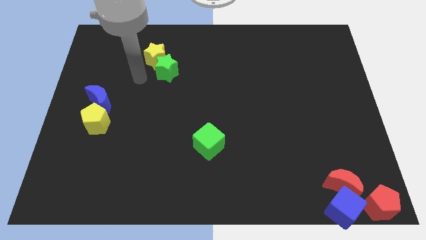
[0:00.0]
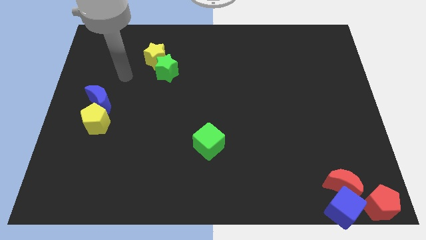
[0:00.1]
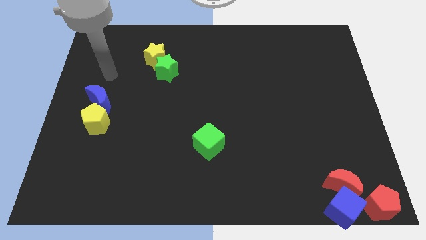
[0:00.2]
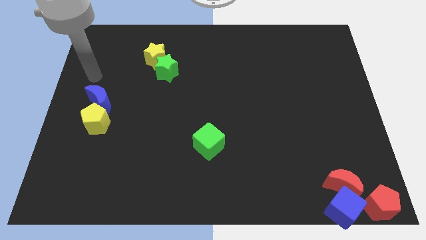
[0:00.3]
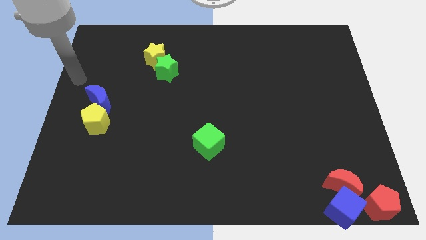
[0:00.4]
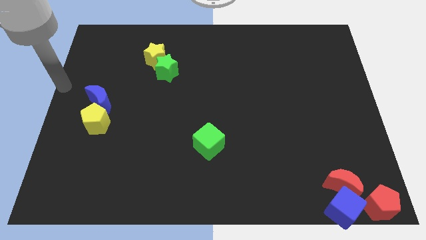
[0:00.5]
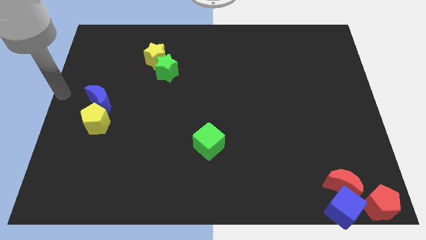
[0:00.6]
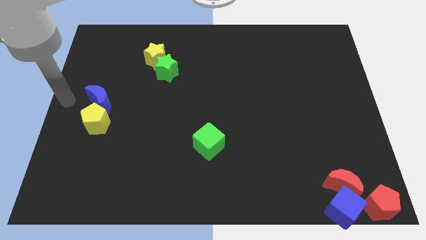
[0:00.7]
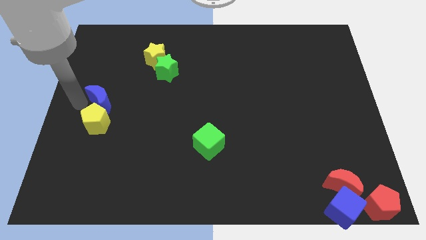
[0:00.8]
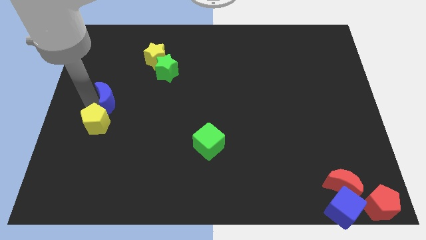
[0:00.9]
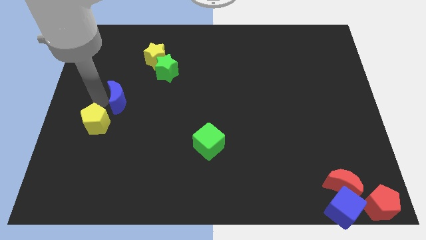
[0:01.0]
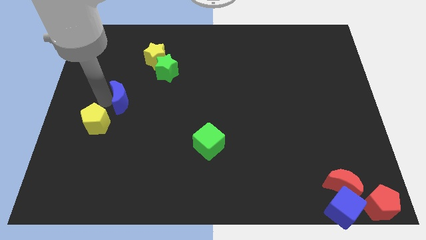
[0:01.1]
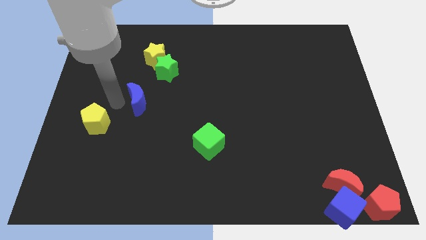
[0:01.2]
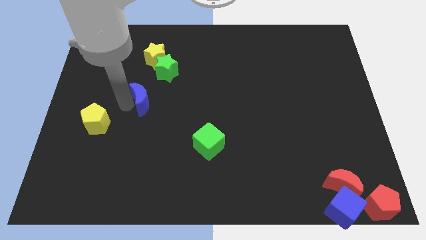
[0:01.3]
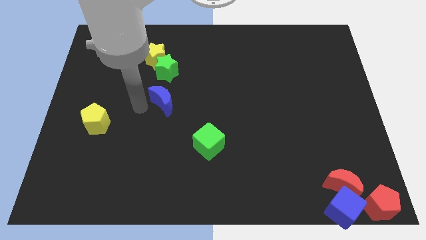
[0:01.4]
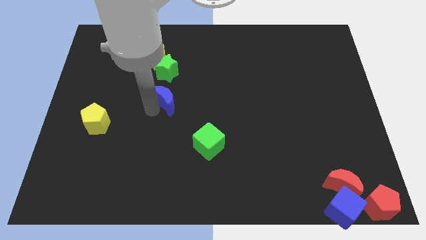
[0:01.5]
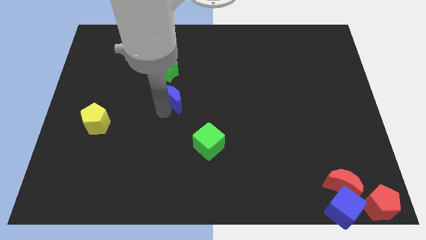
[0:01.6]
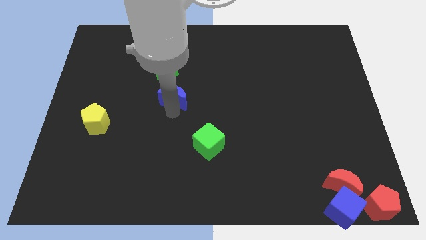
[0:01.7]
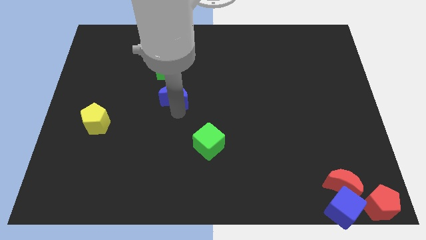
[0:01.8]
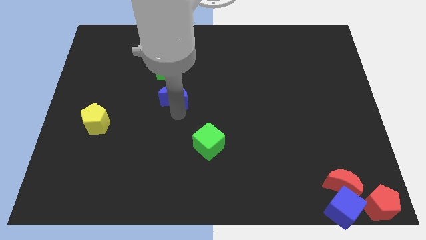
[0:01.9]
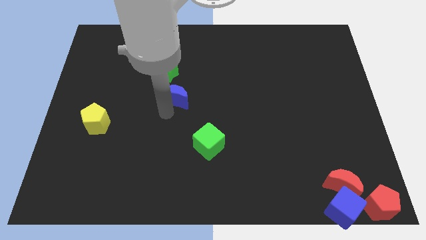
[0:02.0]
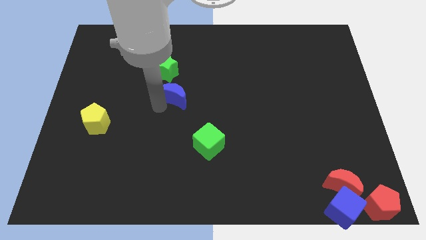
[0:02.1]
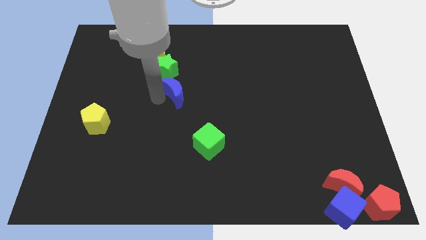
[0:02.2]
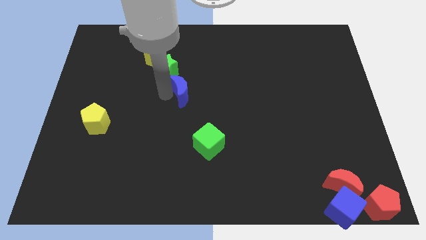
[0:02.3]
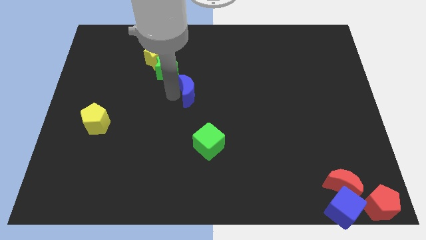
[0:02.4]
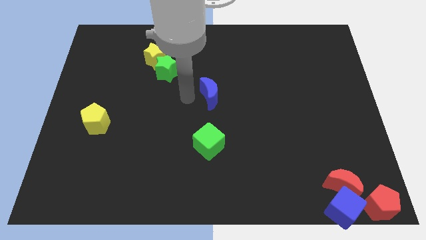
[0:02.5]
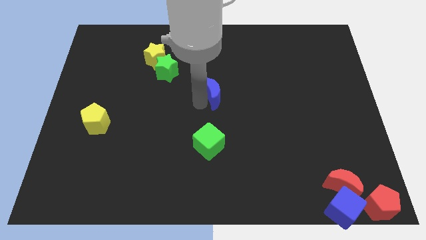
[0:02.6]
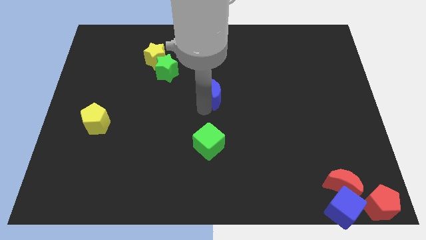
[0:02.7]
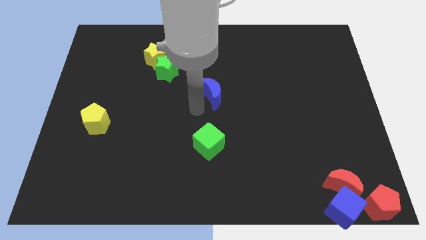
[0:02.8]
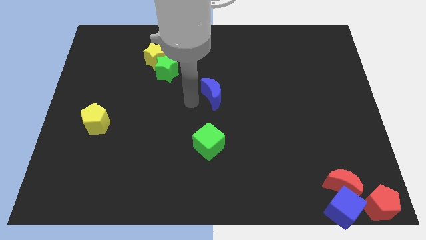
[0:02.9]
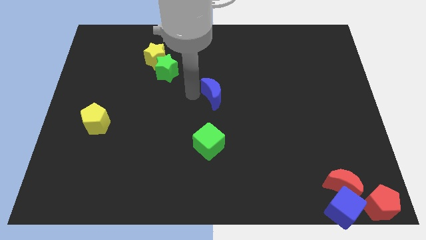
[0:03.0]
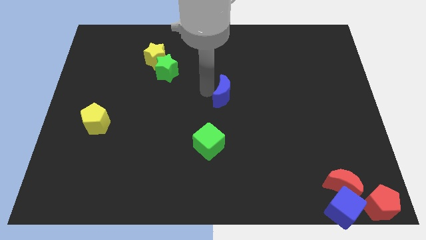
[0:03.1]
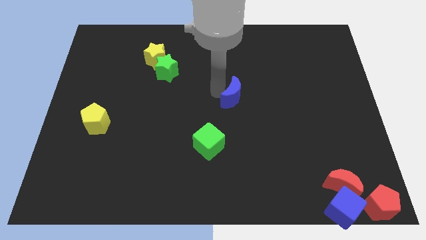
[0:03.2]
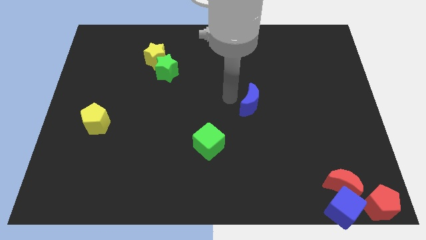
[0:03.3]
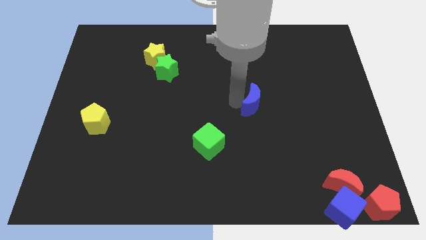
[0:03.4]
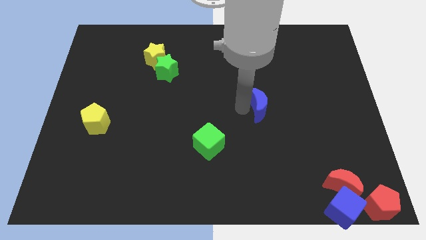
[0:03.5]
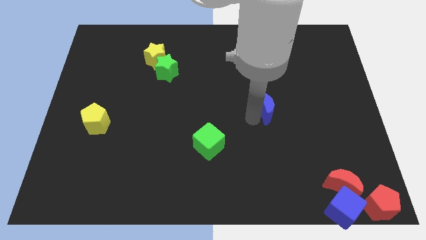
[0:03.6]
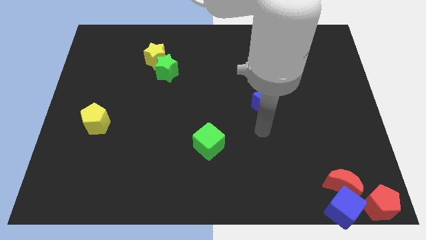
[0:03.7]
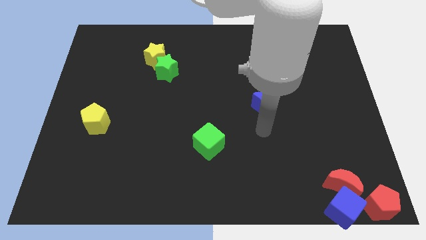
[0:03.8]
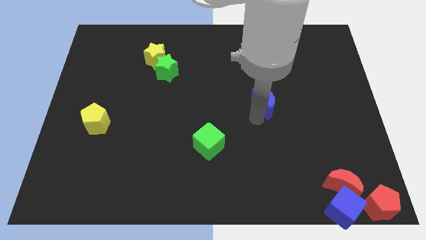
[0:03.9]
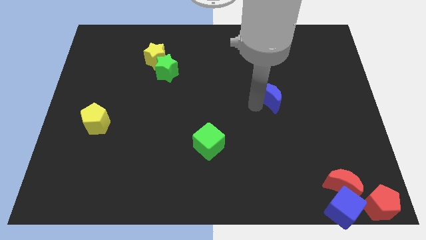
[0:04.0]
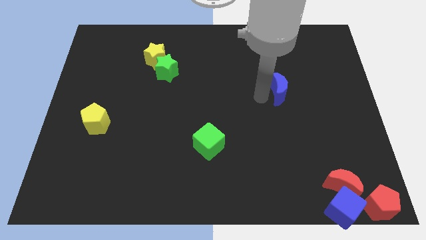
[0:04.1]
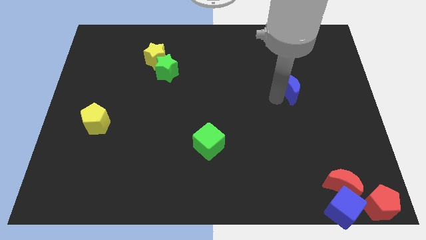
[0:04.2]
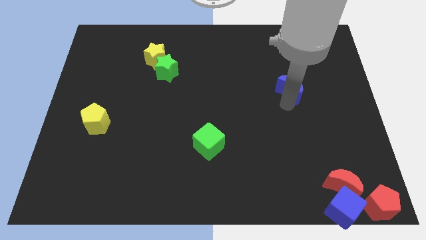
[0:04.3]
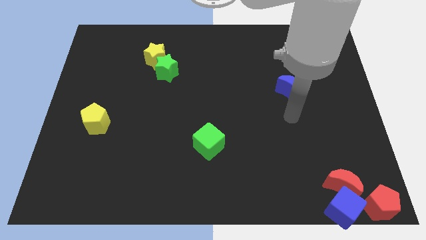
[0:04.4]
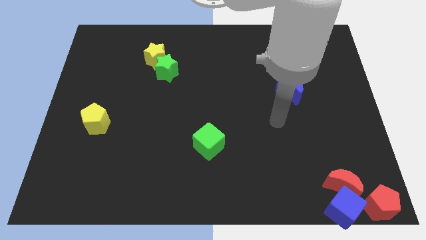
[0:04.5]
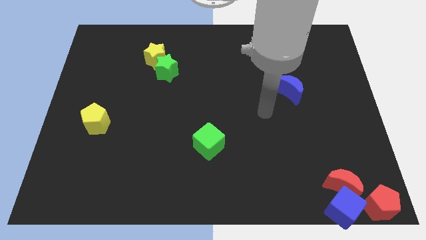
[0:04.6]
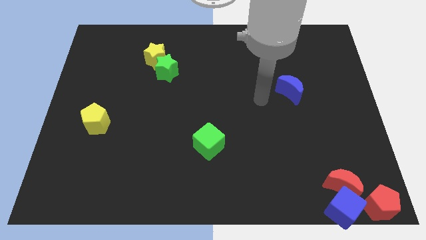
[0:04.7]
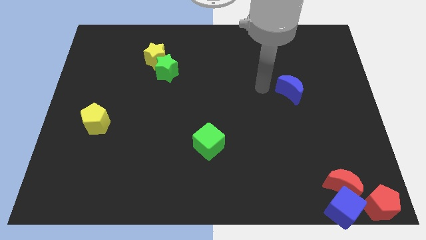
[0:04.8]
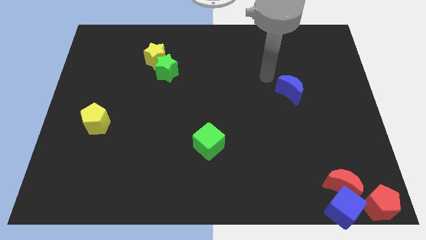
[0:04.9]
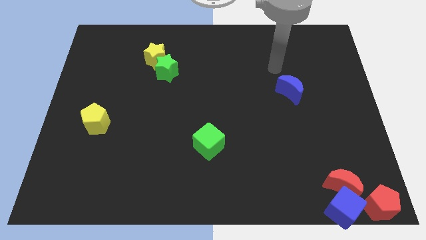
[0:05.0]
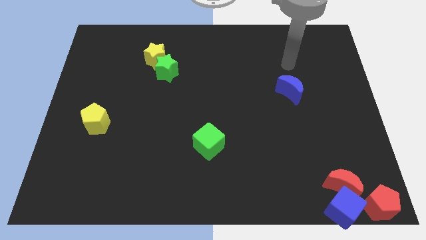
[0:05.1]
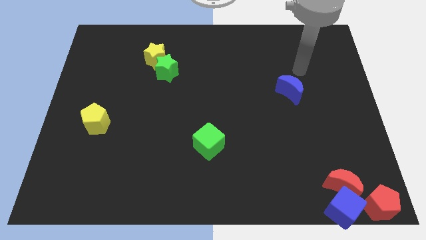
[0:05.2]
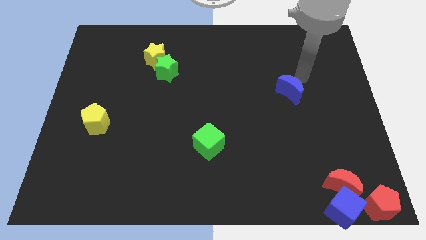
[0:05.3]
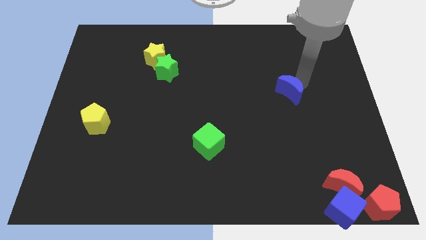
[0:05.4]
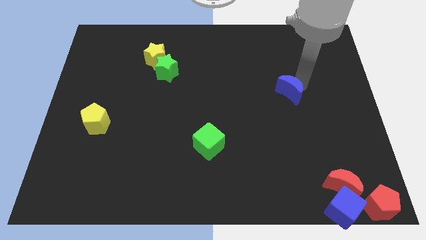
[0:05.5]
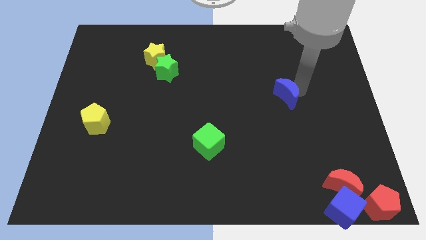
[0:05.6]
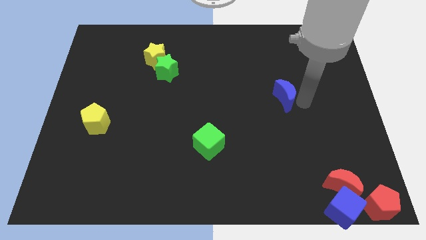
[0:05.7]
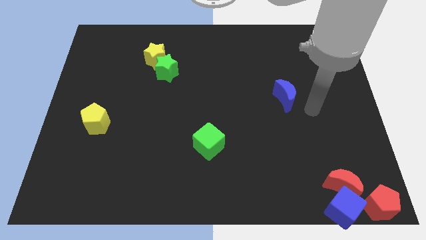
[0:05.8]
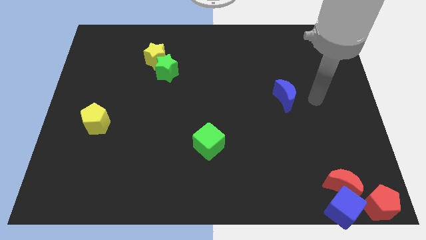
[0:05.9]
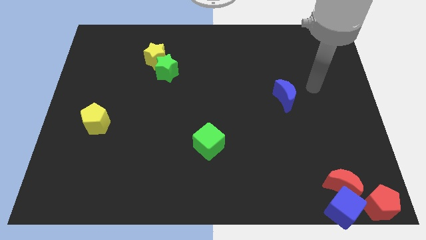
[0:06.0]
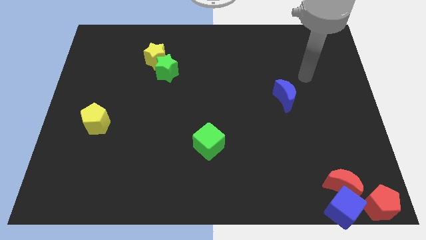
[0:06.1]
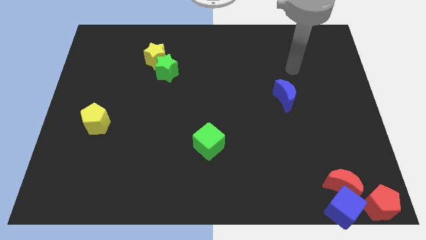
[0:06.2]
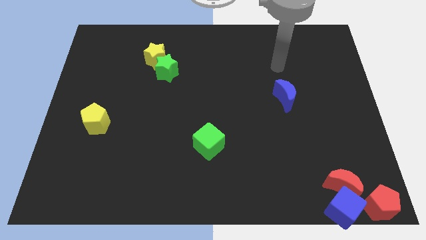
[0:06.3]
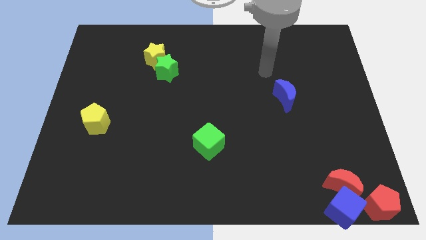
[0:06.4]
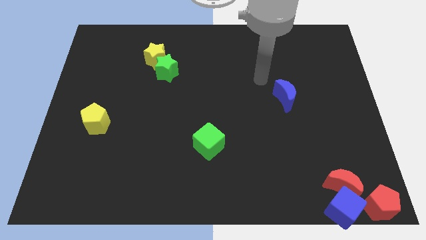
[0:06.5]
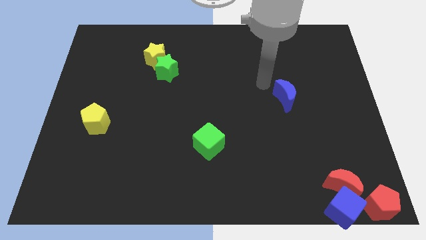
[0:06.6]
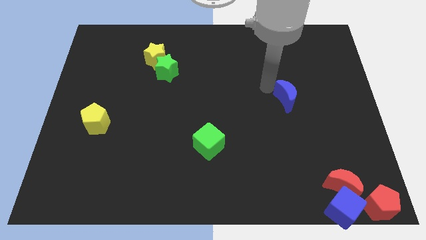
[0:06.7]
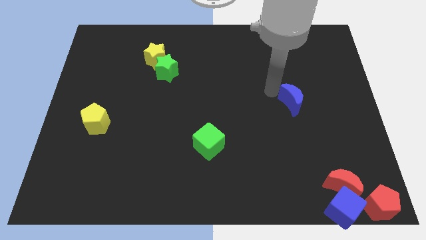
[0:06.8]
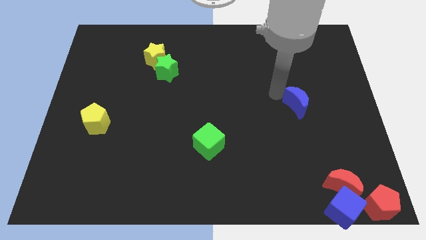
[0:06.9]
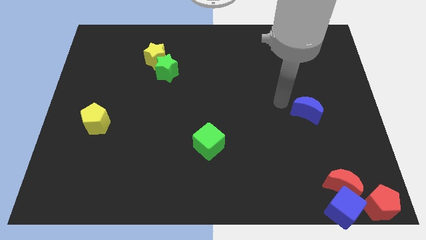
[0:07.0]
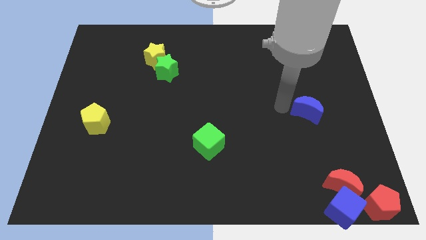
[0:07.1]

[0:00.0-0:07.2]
slide the blue crescent to the right side of the table

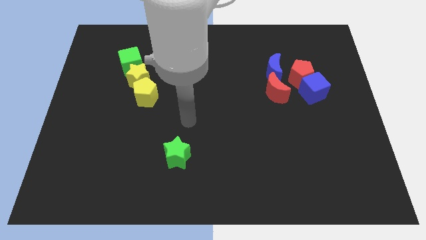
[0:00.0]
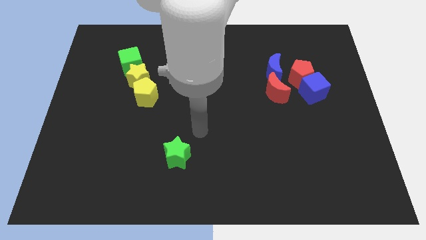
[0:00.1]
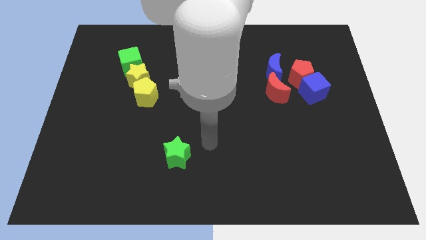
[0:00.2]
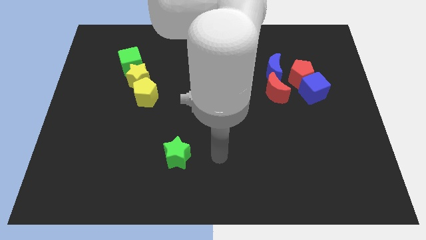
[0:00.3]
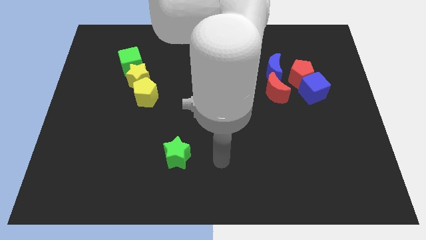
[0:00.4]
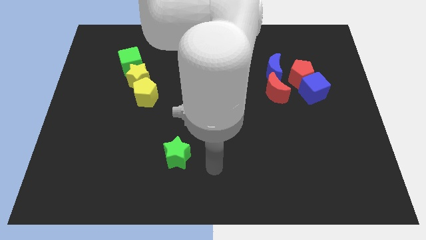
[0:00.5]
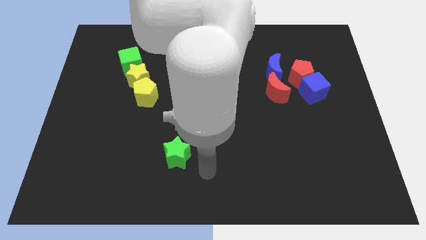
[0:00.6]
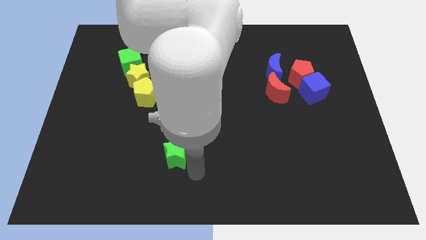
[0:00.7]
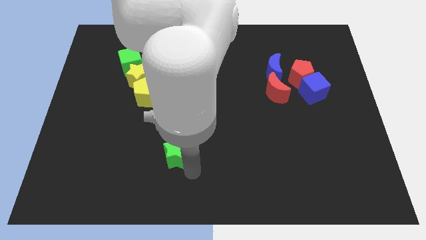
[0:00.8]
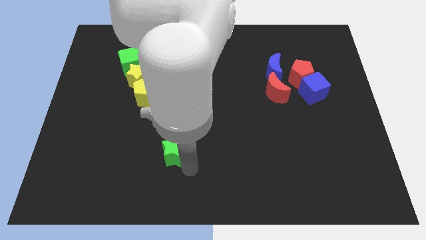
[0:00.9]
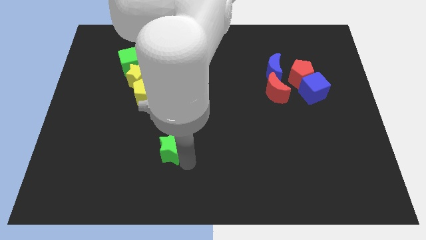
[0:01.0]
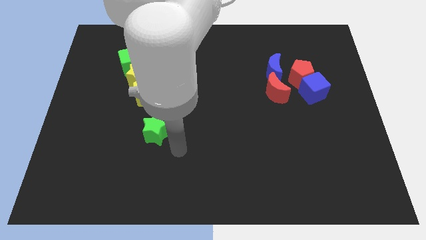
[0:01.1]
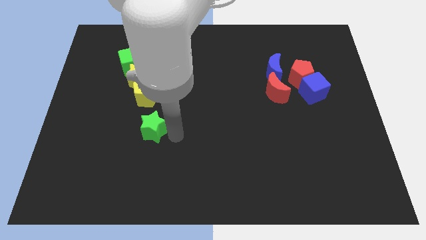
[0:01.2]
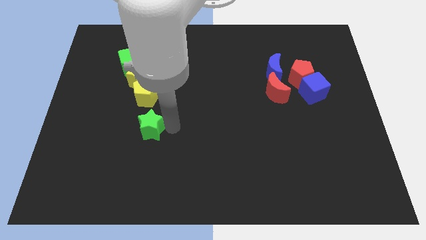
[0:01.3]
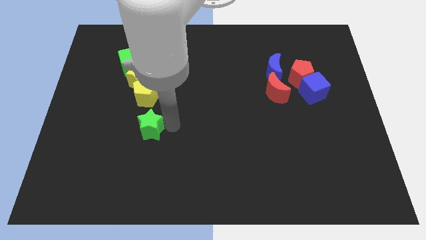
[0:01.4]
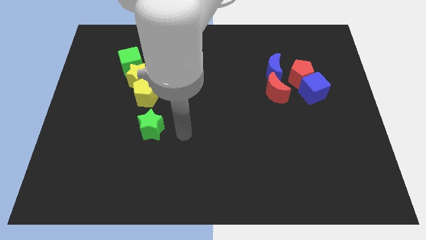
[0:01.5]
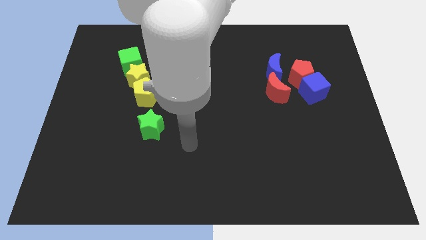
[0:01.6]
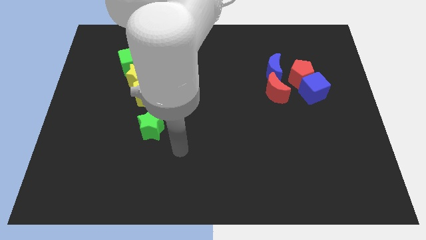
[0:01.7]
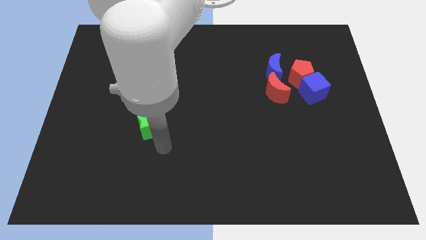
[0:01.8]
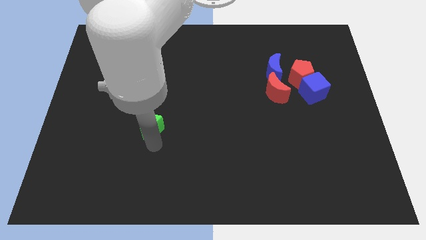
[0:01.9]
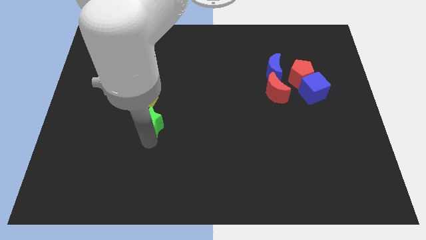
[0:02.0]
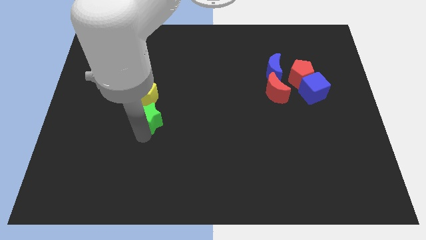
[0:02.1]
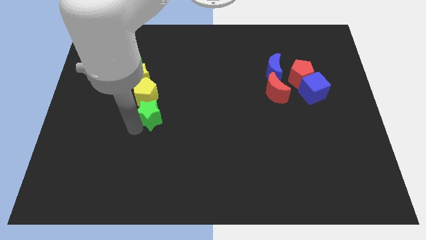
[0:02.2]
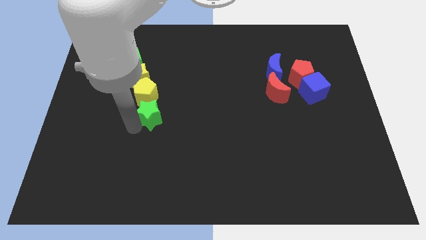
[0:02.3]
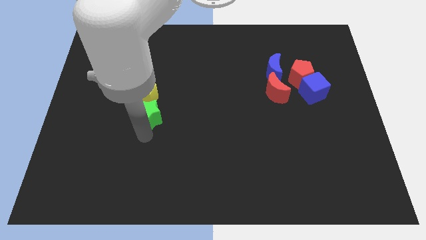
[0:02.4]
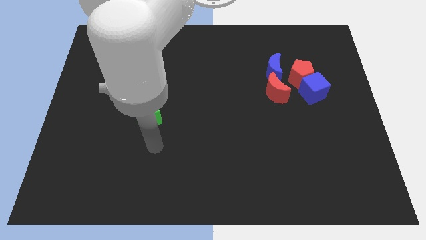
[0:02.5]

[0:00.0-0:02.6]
push the green star below the yellow pentagon
